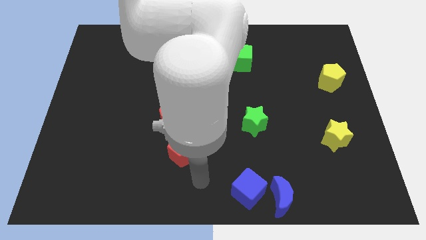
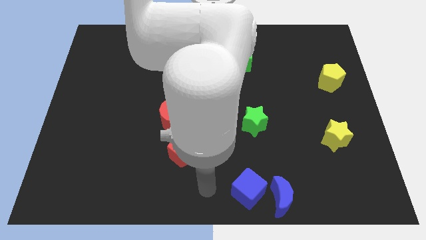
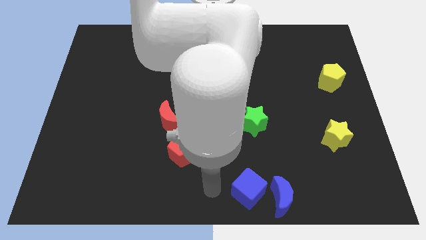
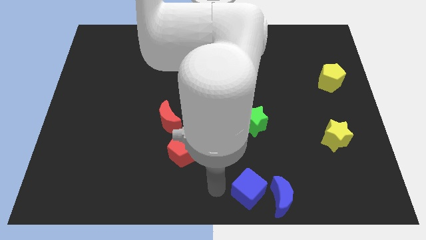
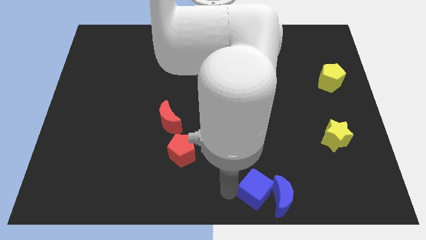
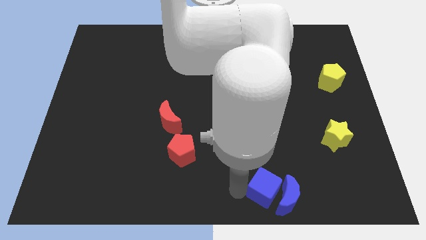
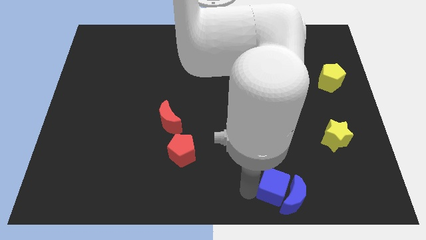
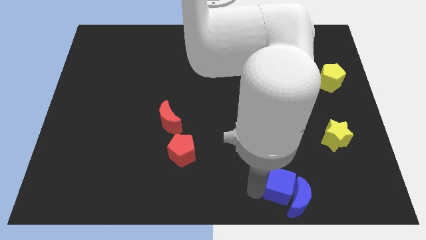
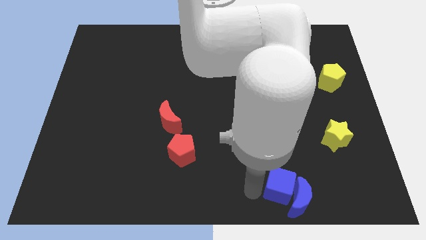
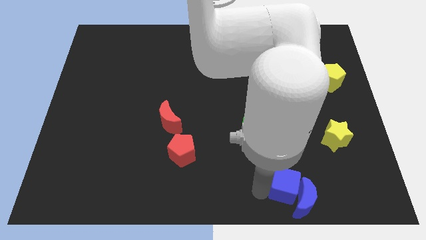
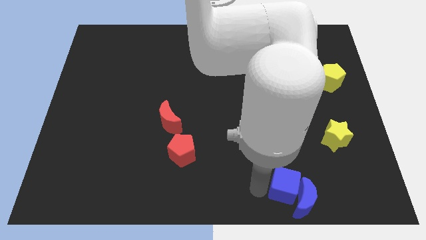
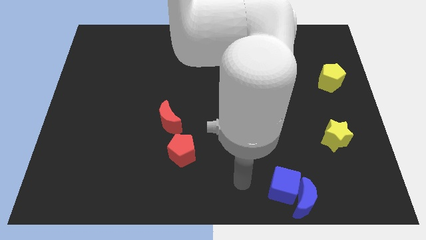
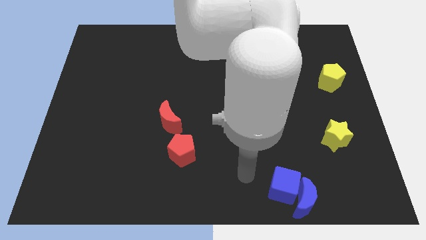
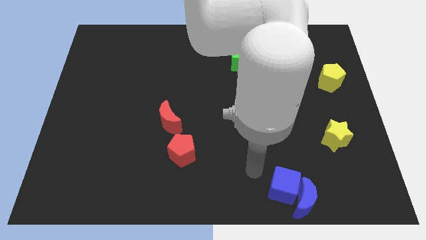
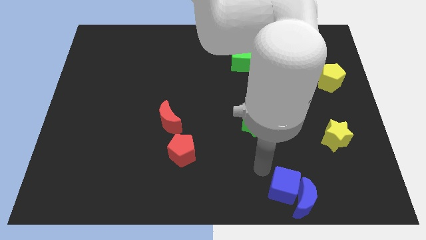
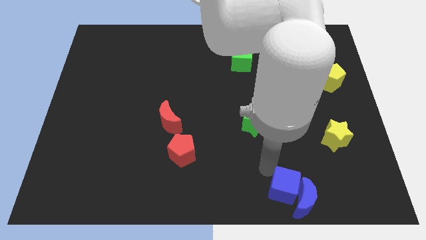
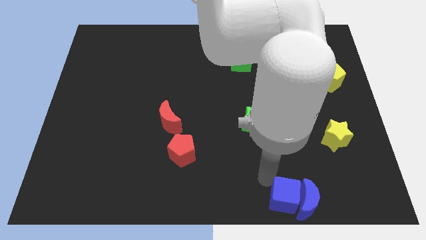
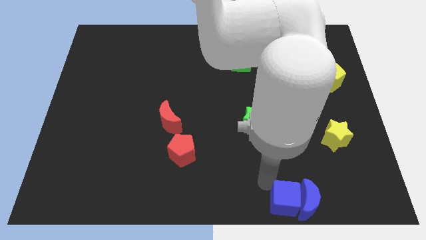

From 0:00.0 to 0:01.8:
move the blue cube into blue moon

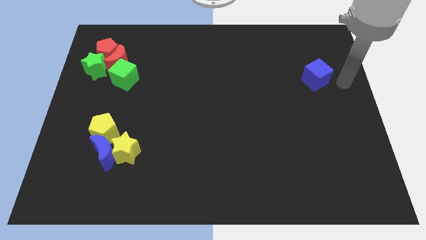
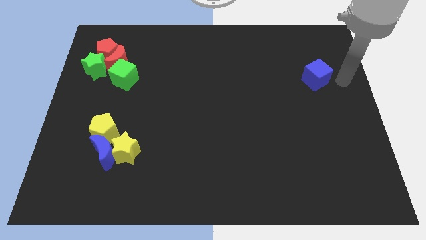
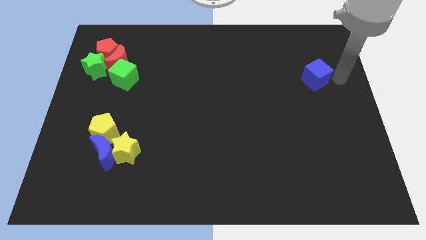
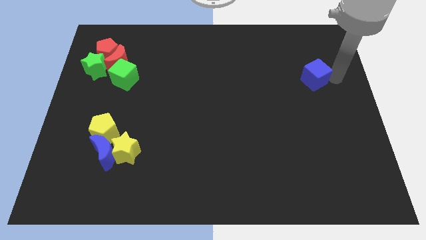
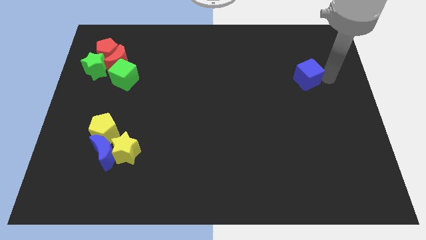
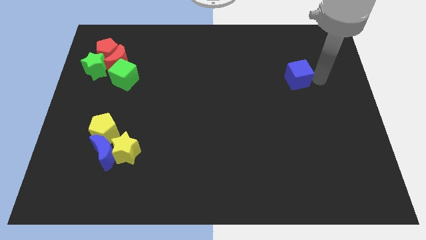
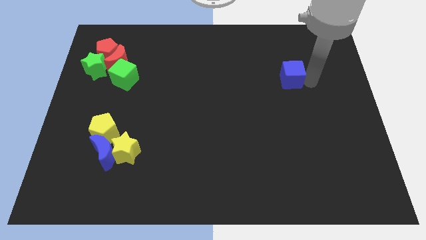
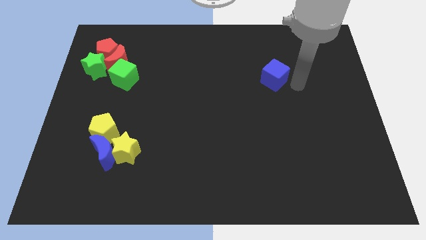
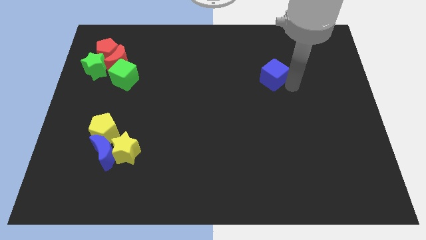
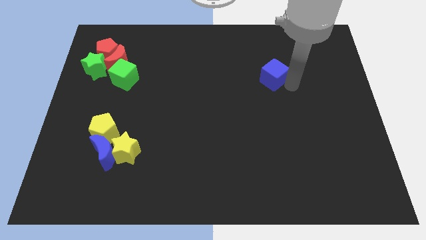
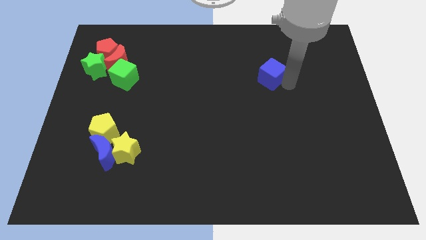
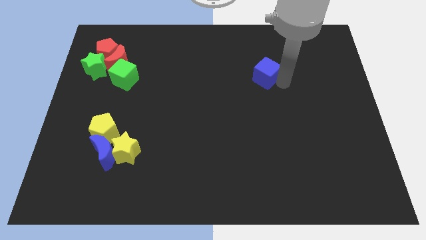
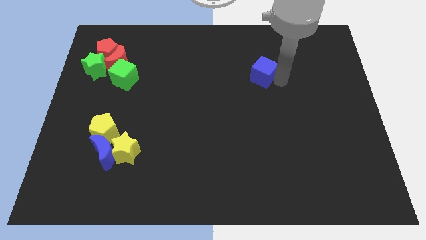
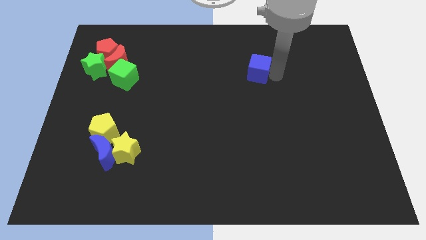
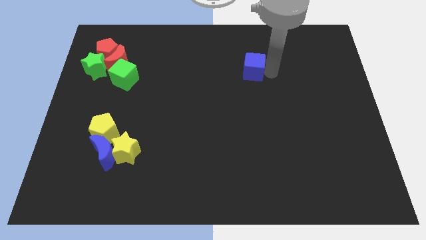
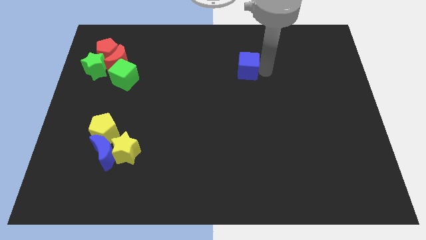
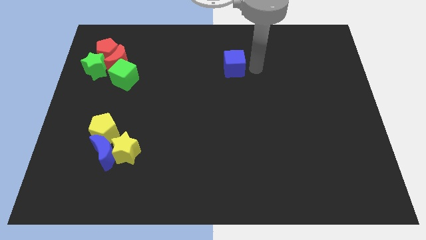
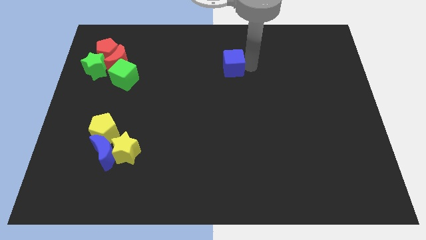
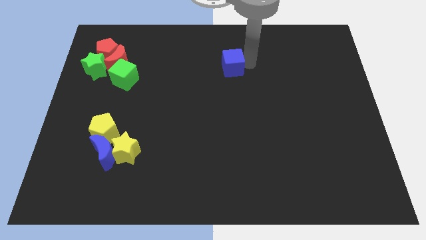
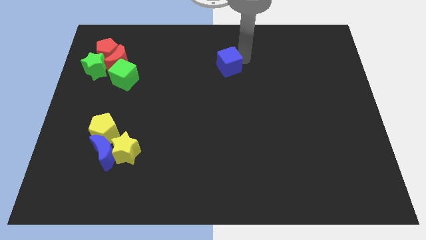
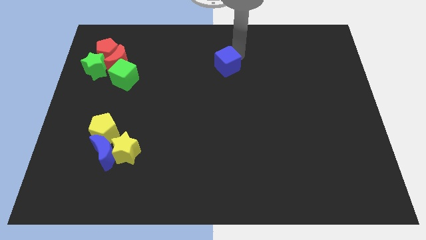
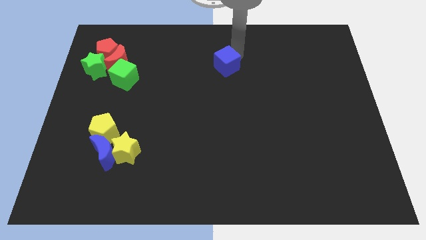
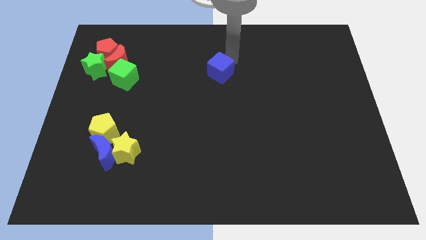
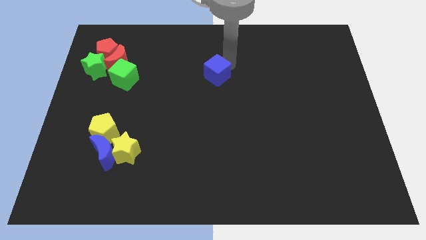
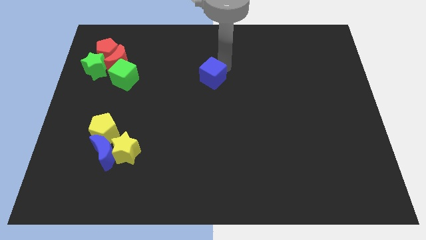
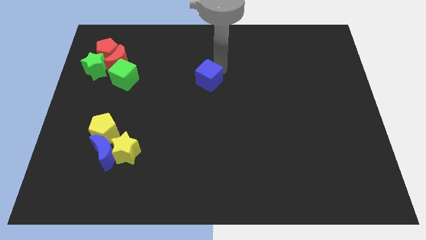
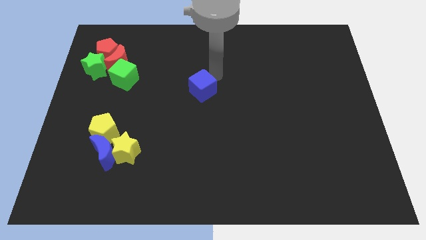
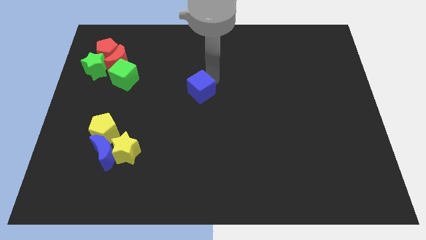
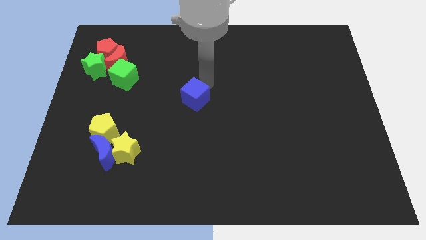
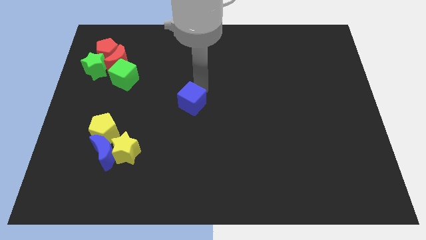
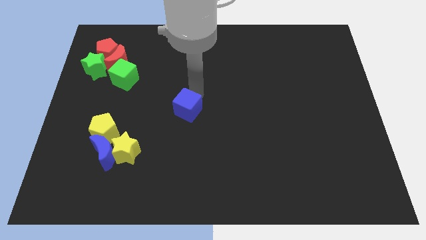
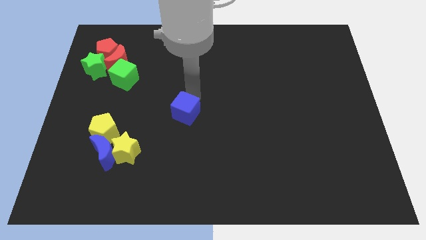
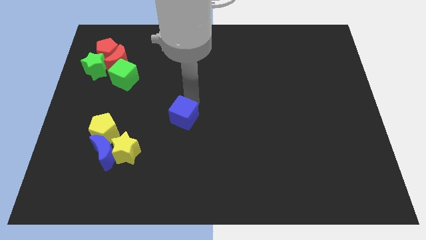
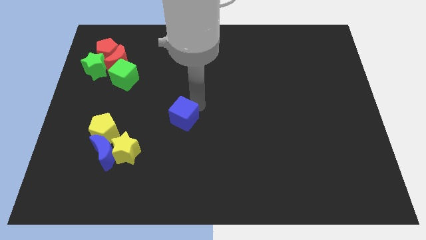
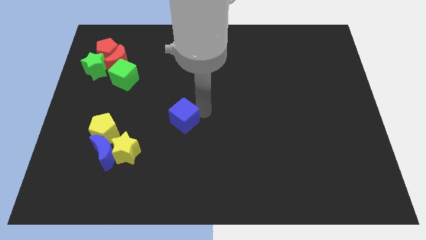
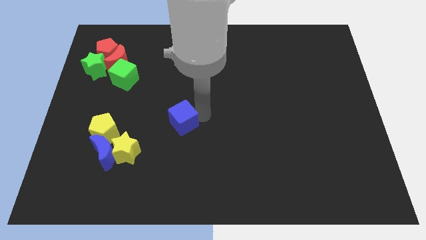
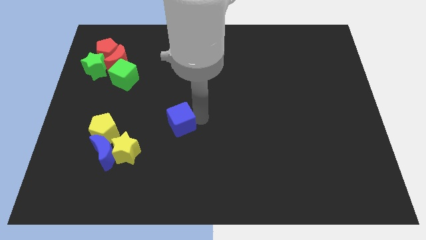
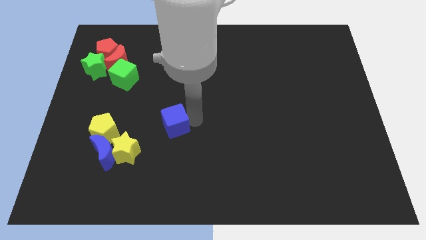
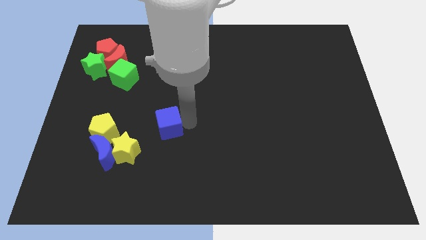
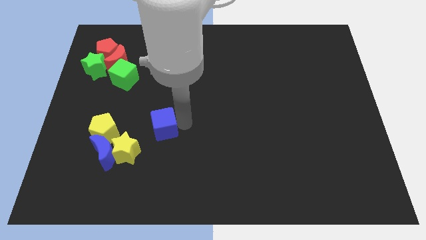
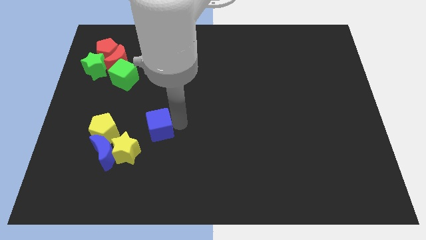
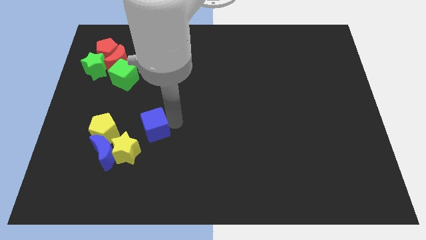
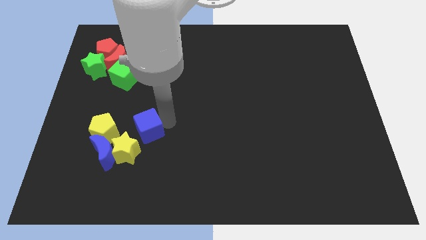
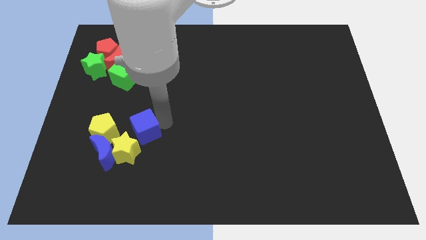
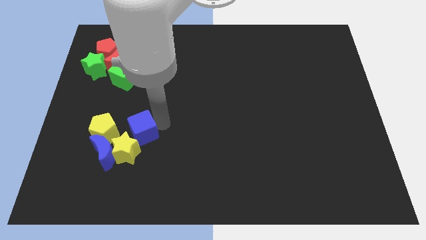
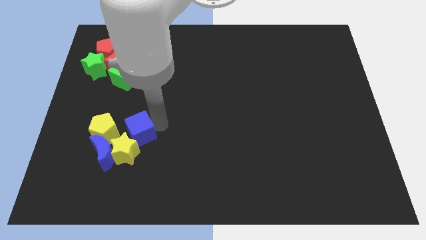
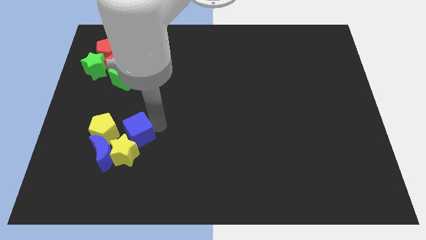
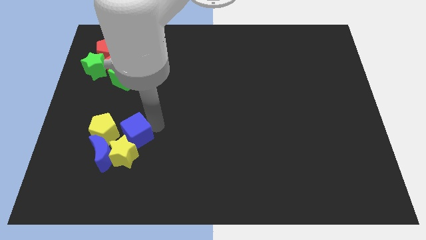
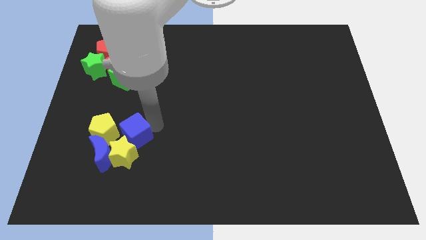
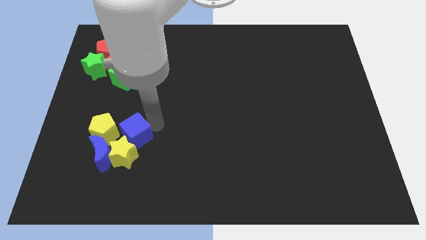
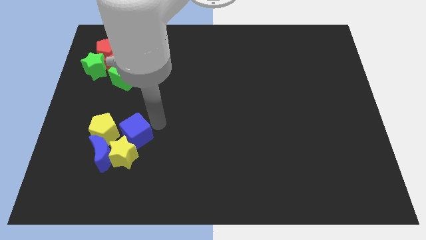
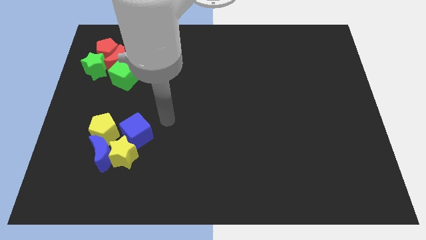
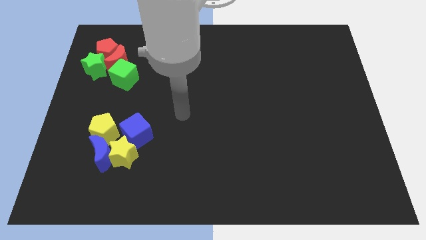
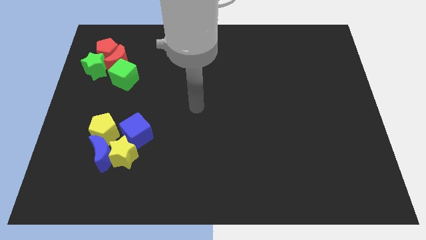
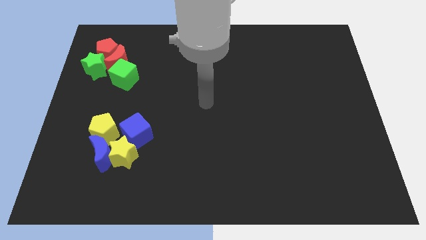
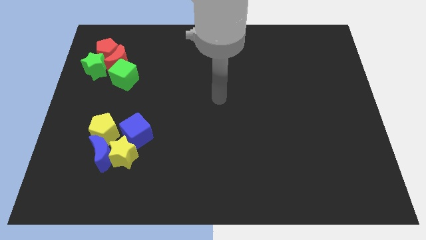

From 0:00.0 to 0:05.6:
move the blue cube towards the yellow pentagon

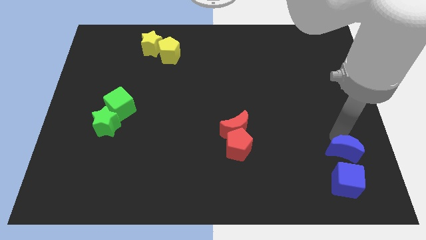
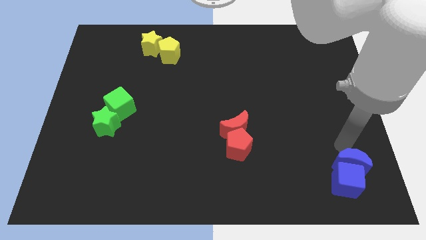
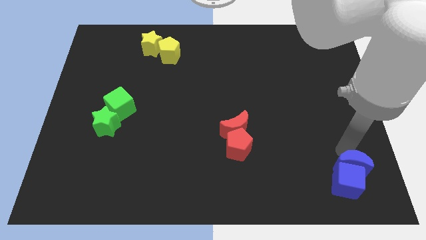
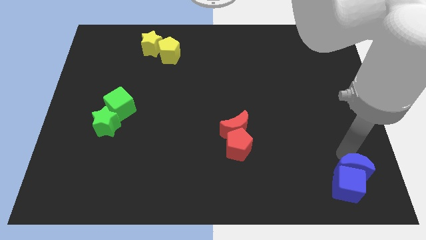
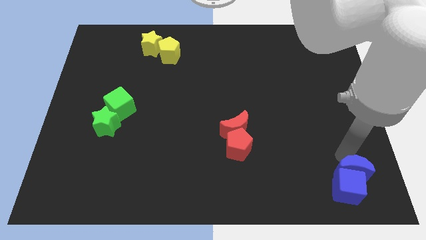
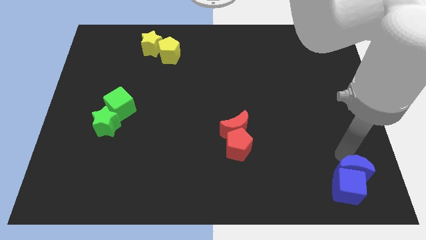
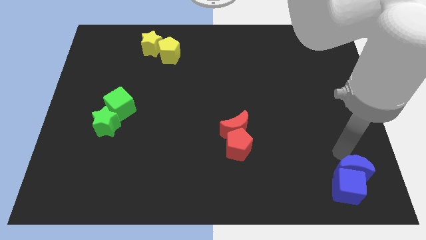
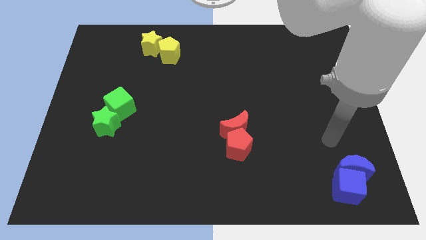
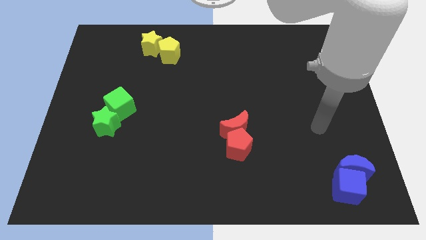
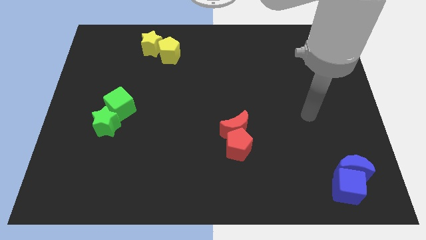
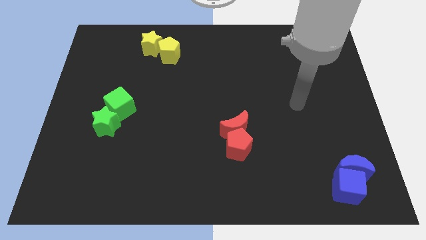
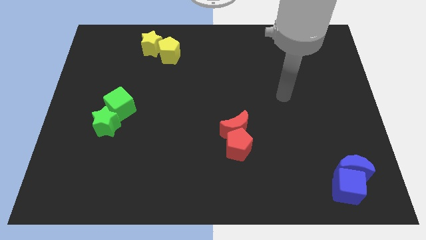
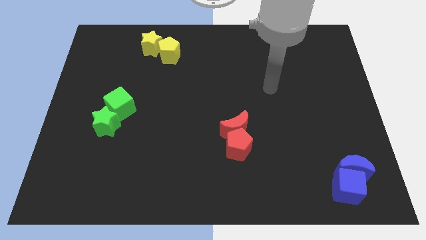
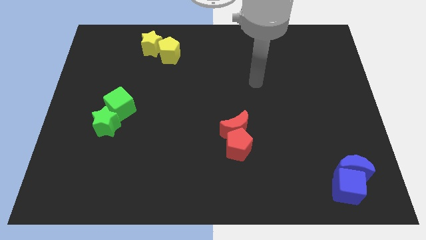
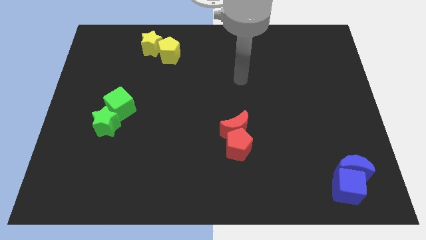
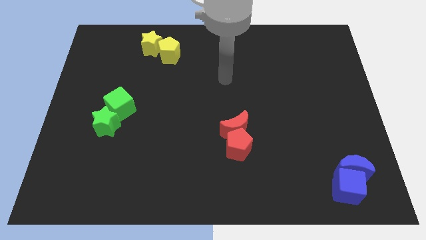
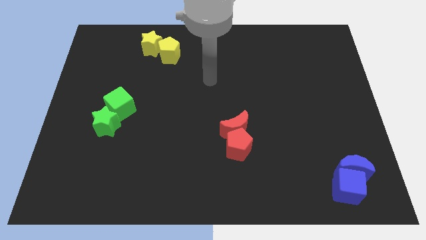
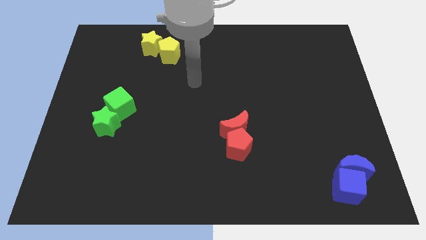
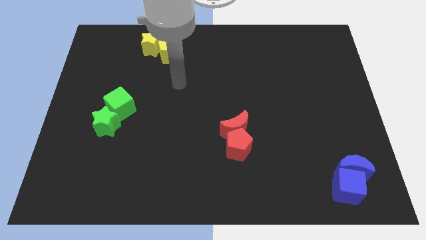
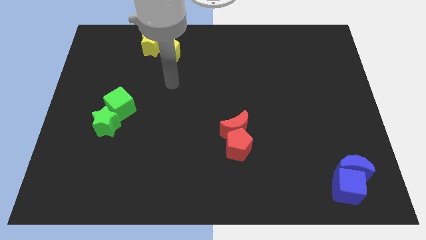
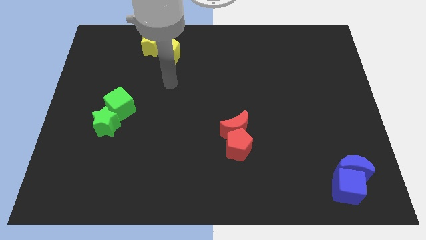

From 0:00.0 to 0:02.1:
put blue blocks together
